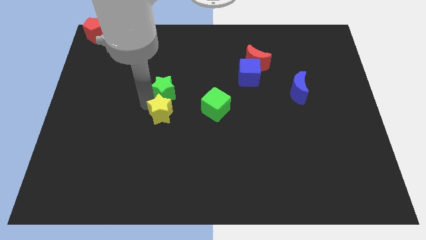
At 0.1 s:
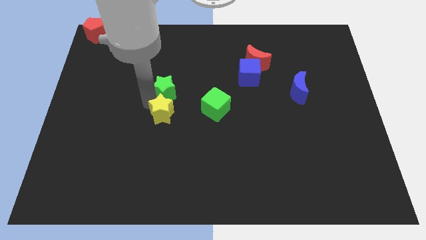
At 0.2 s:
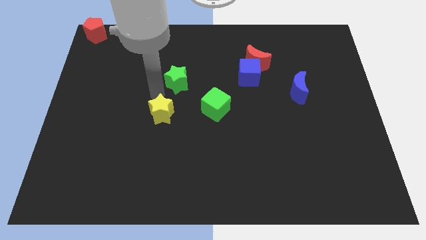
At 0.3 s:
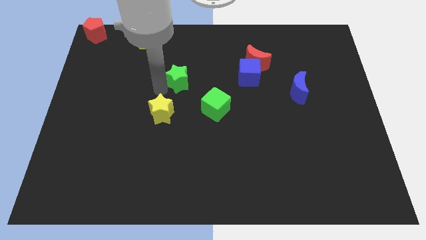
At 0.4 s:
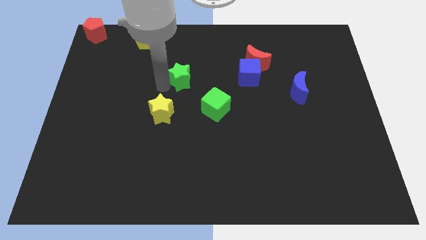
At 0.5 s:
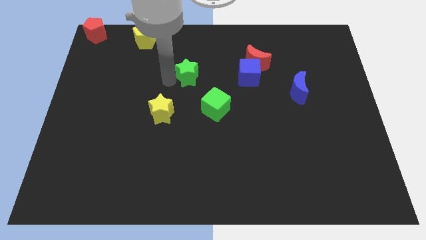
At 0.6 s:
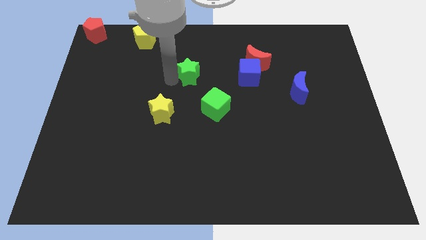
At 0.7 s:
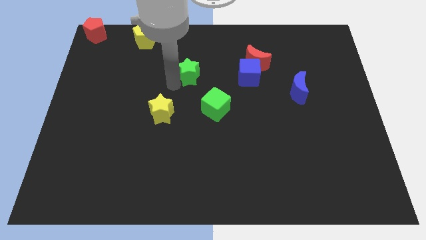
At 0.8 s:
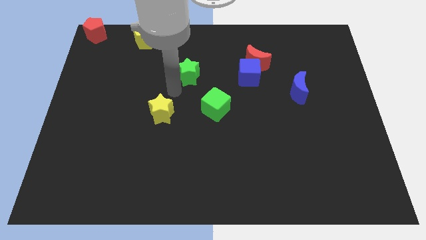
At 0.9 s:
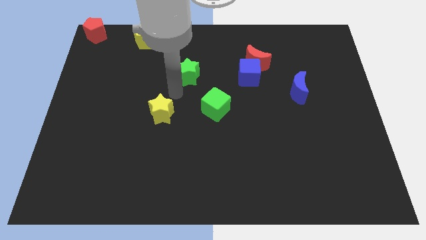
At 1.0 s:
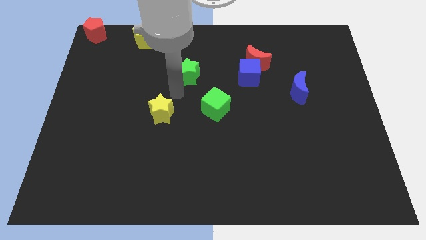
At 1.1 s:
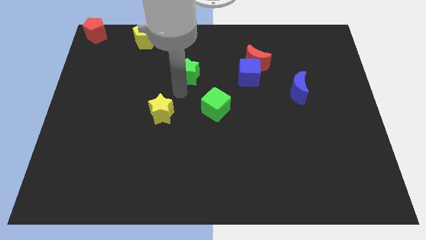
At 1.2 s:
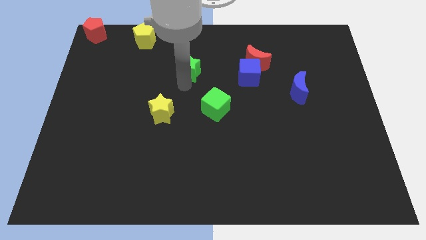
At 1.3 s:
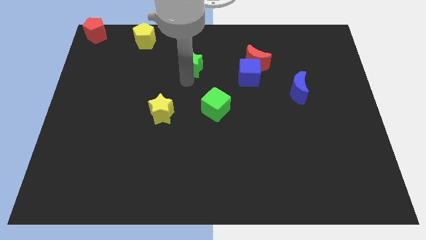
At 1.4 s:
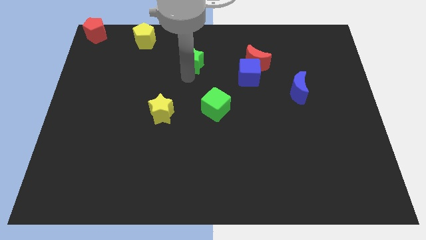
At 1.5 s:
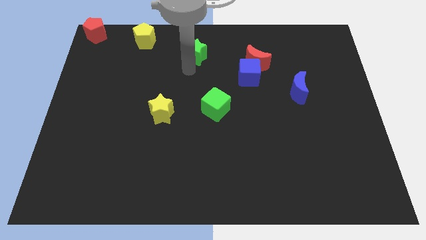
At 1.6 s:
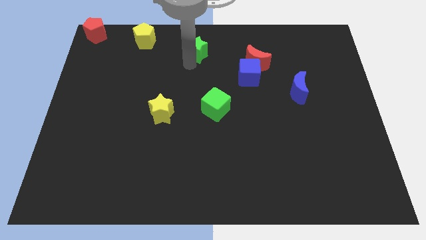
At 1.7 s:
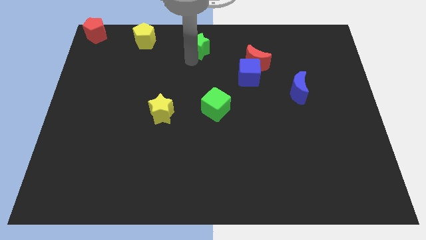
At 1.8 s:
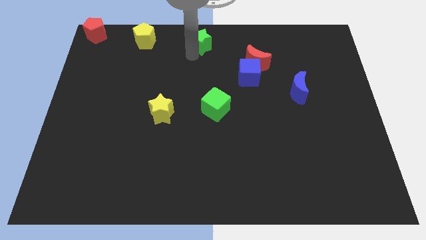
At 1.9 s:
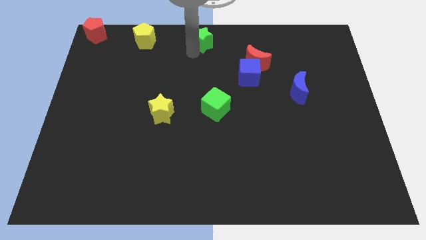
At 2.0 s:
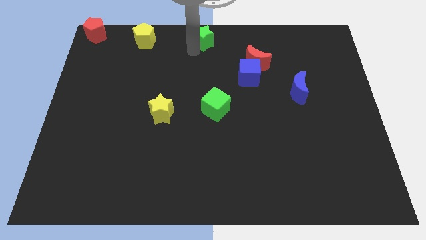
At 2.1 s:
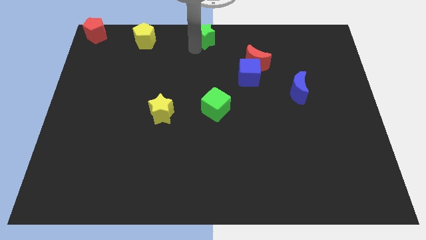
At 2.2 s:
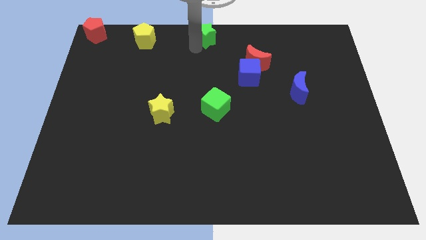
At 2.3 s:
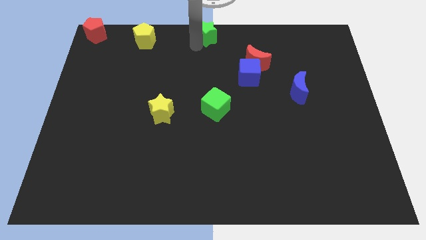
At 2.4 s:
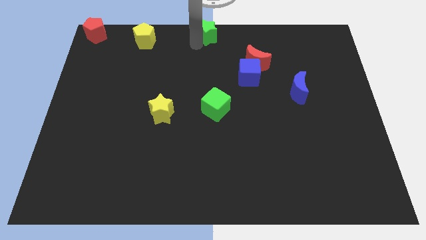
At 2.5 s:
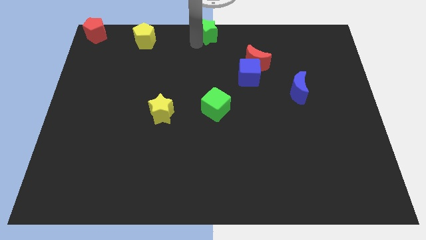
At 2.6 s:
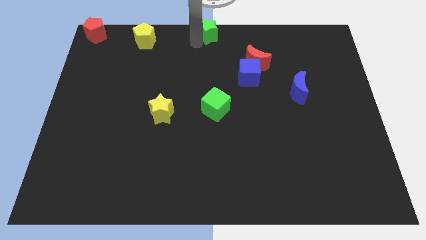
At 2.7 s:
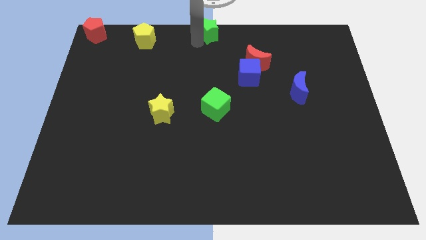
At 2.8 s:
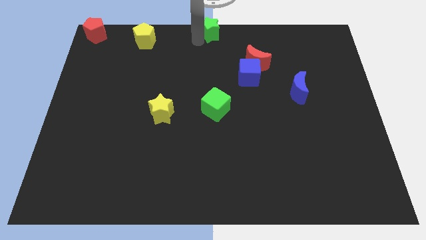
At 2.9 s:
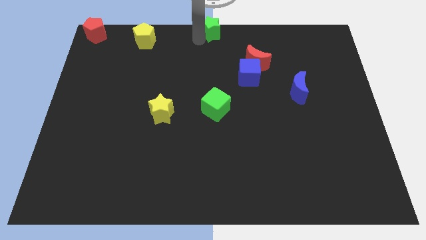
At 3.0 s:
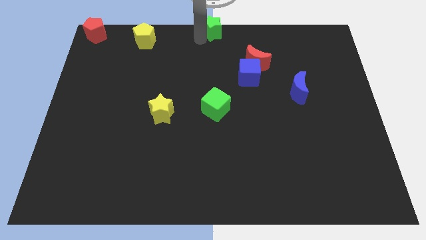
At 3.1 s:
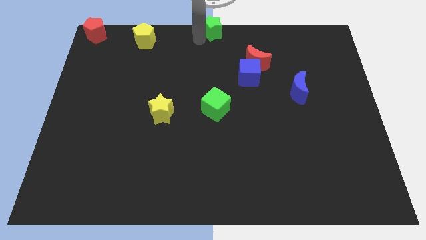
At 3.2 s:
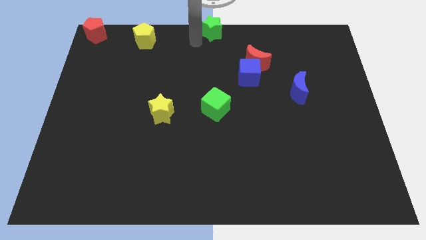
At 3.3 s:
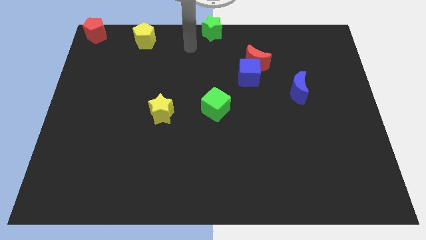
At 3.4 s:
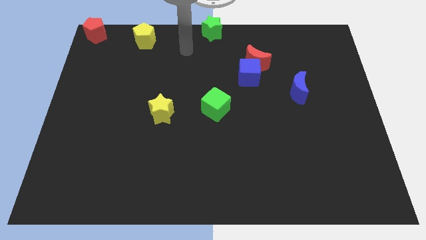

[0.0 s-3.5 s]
move the green star to the top center

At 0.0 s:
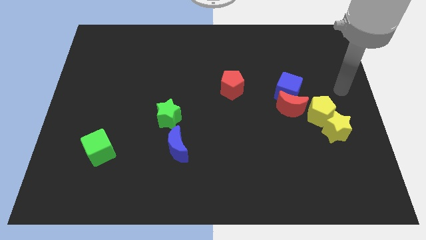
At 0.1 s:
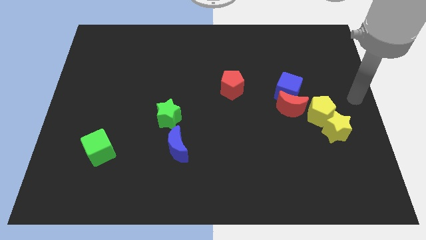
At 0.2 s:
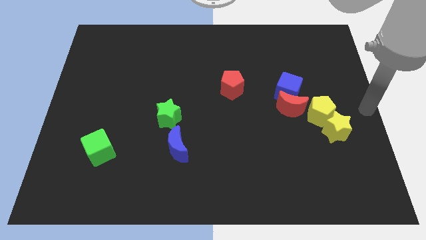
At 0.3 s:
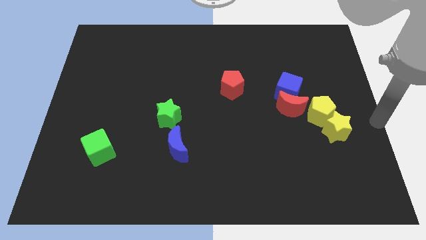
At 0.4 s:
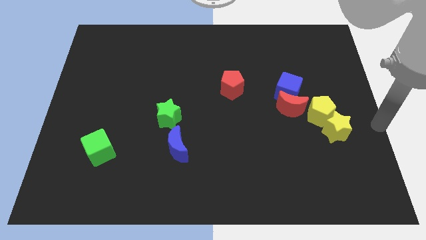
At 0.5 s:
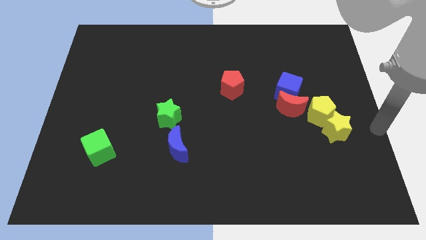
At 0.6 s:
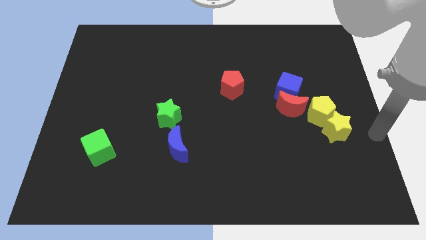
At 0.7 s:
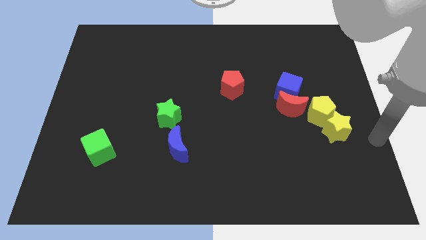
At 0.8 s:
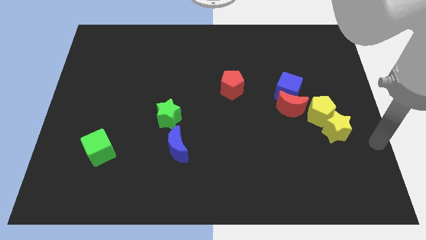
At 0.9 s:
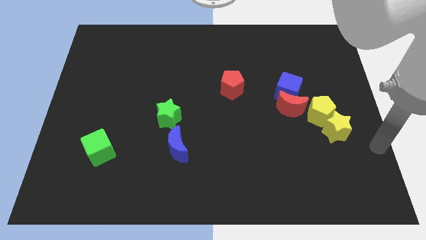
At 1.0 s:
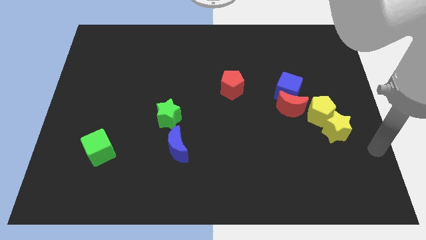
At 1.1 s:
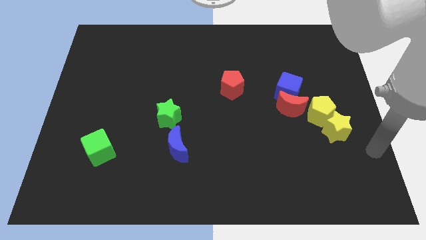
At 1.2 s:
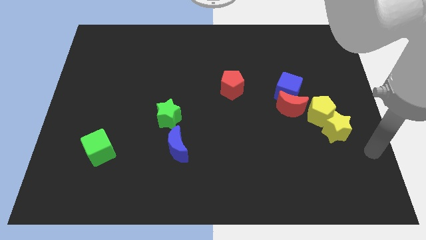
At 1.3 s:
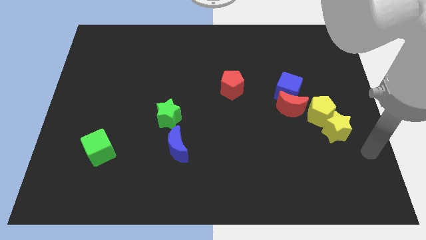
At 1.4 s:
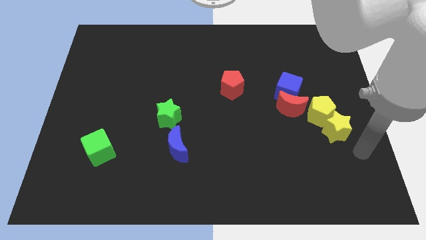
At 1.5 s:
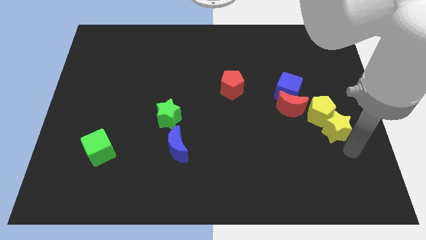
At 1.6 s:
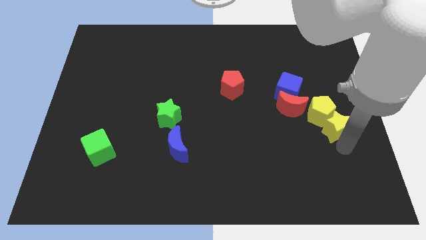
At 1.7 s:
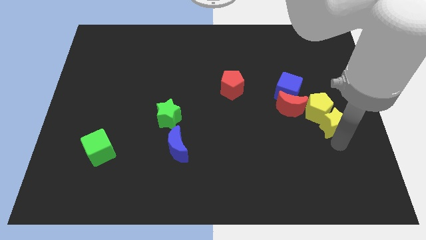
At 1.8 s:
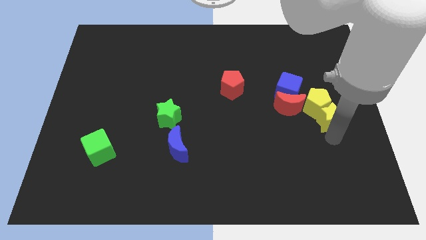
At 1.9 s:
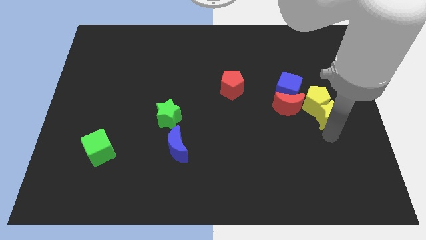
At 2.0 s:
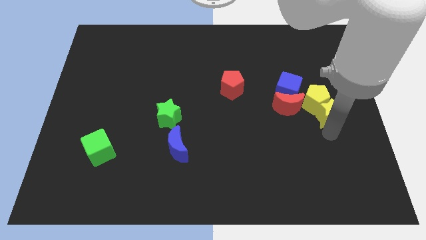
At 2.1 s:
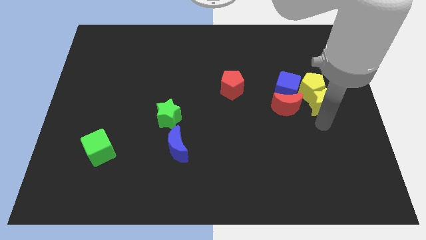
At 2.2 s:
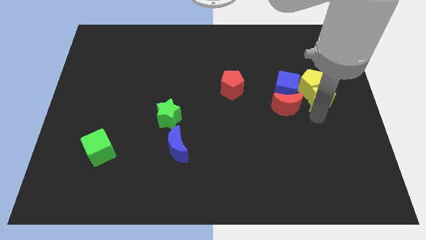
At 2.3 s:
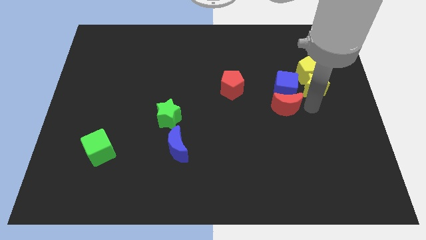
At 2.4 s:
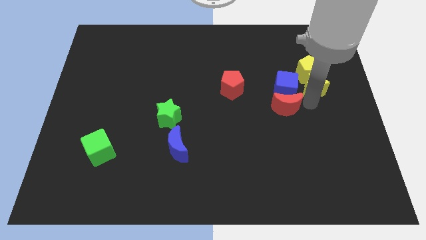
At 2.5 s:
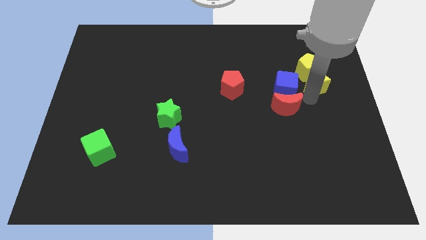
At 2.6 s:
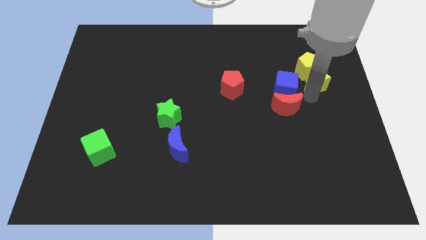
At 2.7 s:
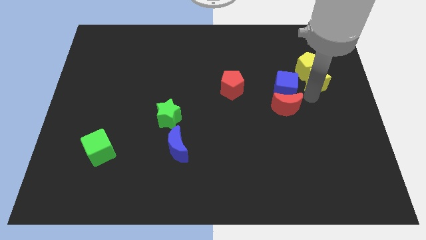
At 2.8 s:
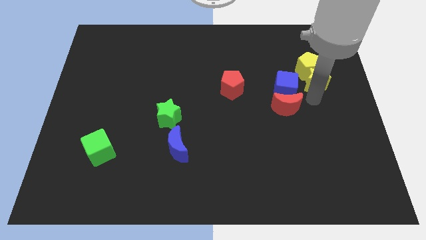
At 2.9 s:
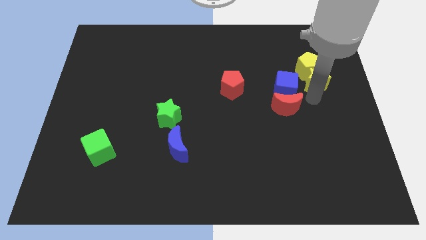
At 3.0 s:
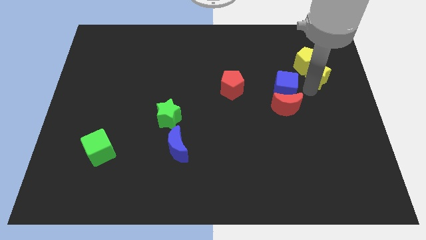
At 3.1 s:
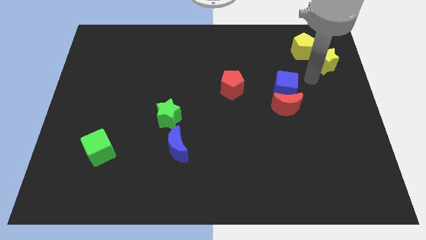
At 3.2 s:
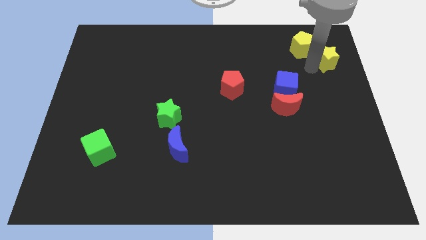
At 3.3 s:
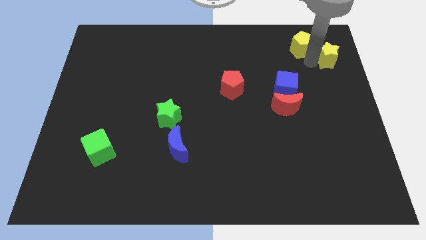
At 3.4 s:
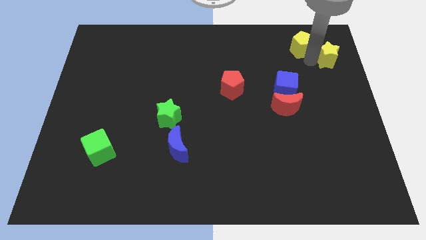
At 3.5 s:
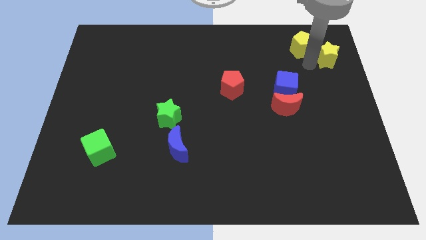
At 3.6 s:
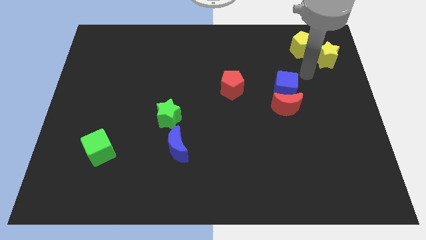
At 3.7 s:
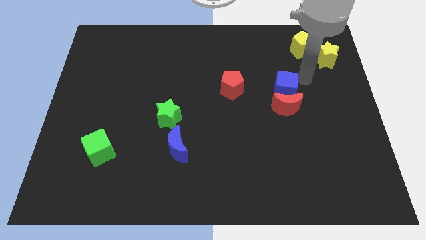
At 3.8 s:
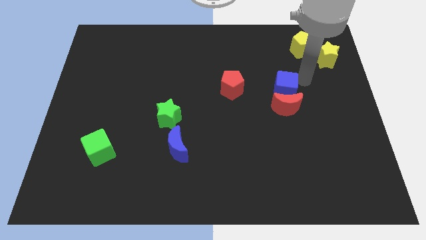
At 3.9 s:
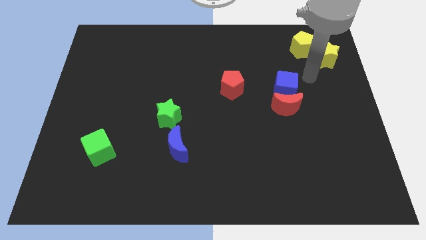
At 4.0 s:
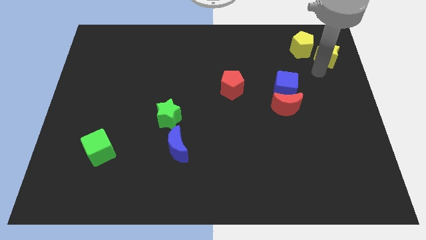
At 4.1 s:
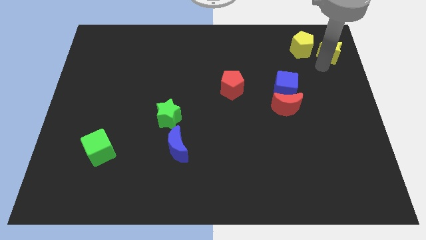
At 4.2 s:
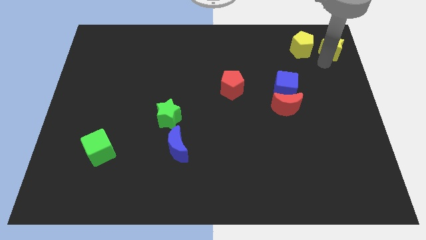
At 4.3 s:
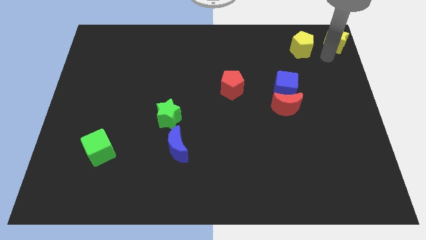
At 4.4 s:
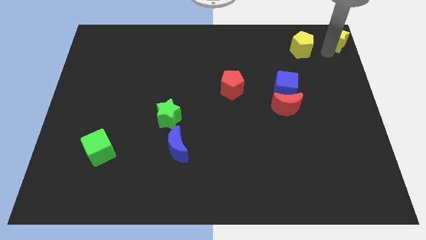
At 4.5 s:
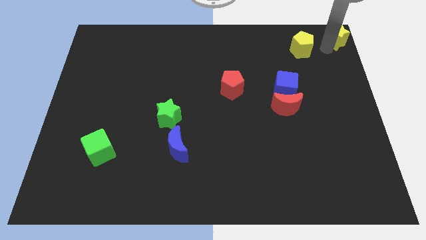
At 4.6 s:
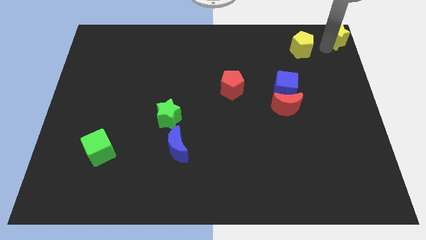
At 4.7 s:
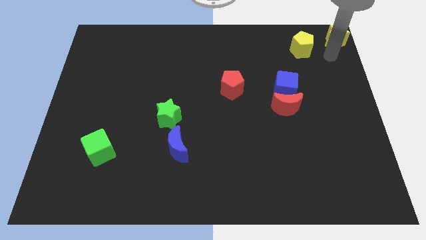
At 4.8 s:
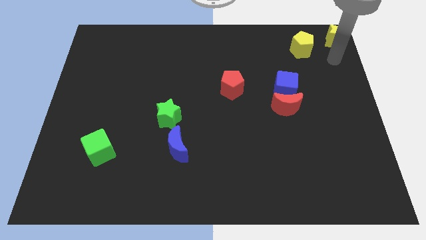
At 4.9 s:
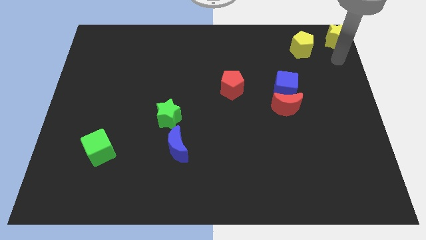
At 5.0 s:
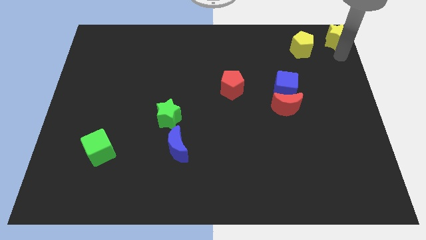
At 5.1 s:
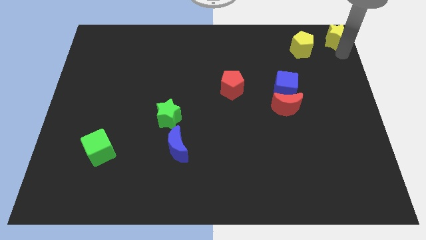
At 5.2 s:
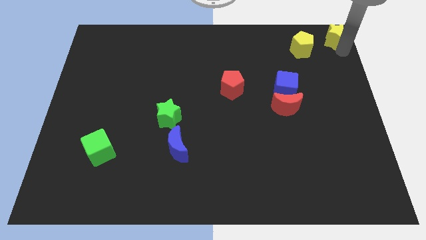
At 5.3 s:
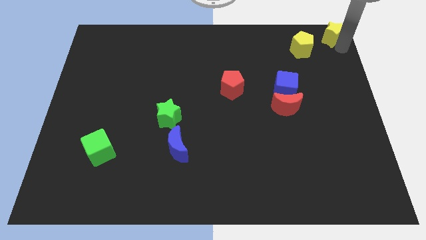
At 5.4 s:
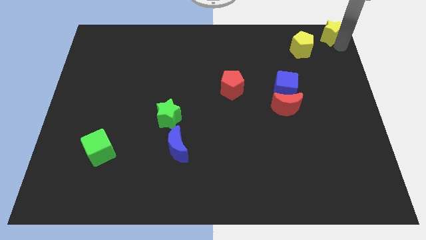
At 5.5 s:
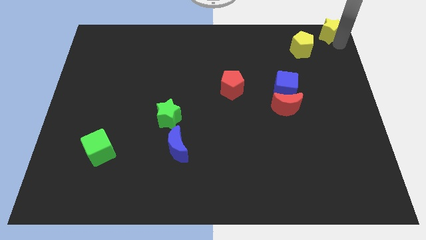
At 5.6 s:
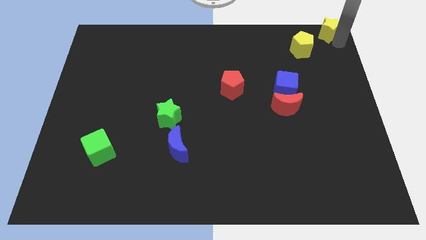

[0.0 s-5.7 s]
move the yellow blocks to the top right
